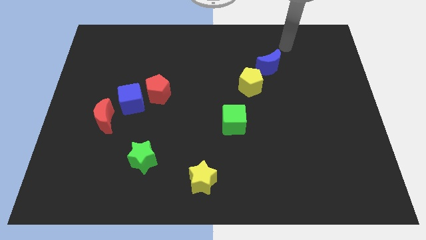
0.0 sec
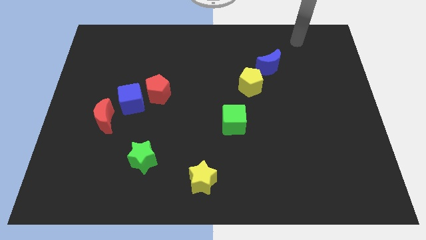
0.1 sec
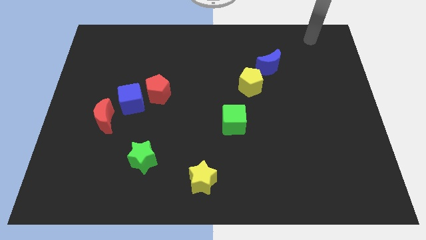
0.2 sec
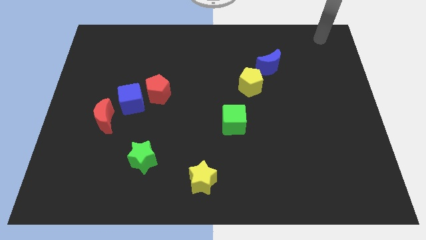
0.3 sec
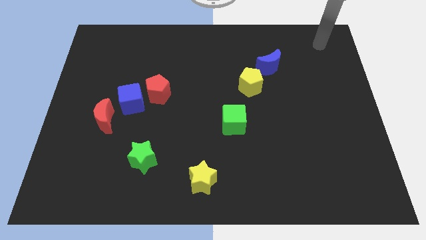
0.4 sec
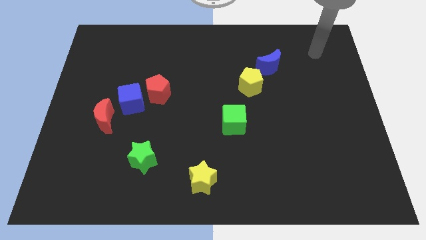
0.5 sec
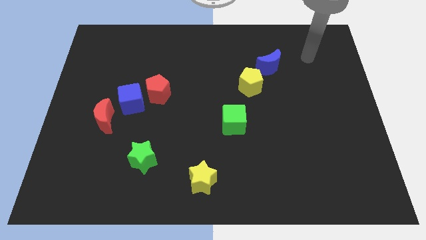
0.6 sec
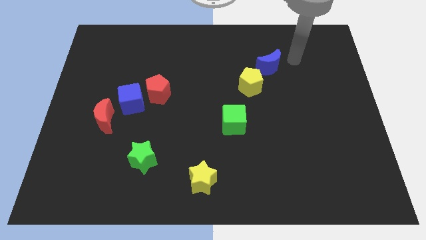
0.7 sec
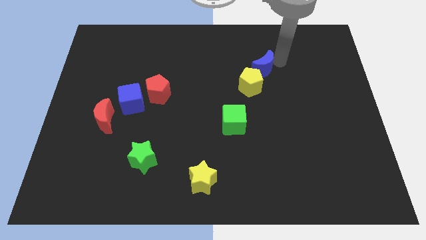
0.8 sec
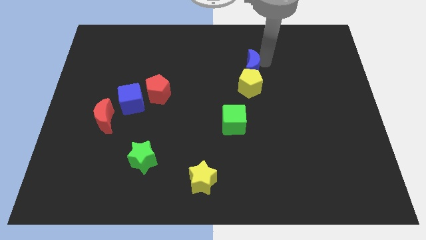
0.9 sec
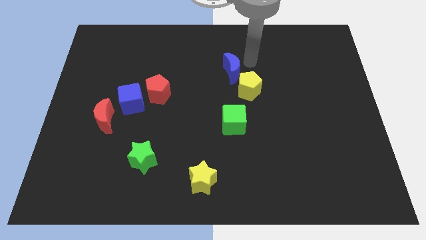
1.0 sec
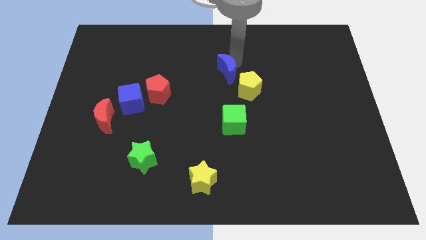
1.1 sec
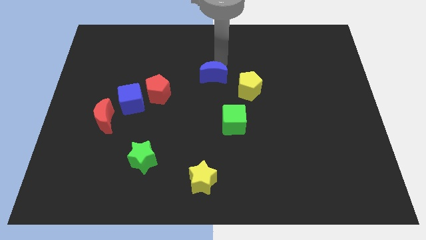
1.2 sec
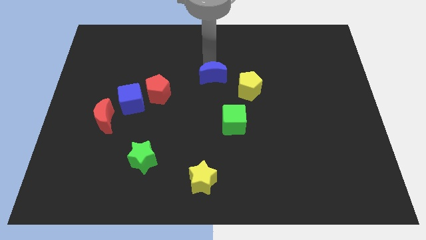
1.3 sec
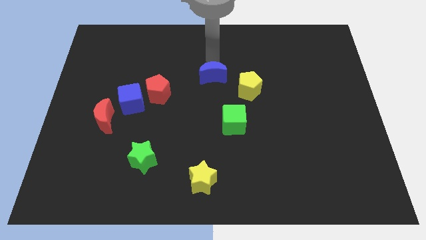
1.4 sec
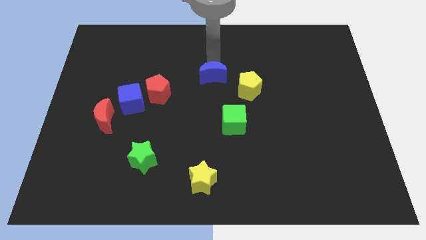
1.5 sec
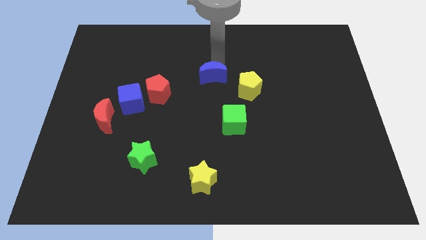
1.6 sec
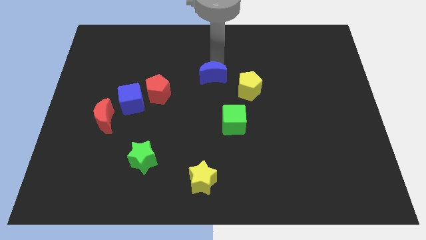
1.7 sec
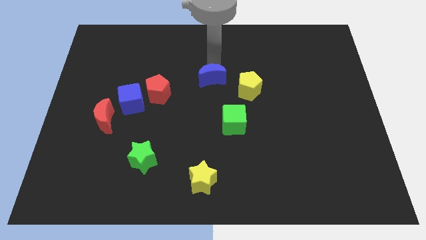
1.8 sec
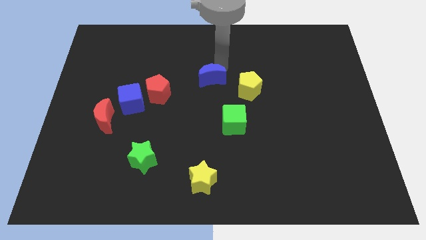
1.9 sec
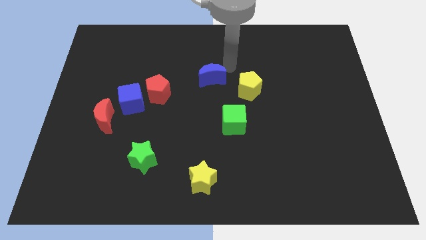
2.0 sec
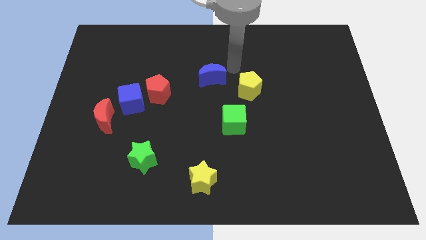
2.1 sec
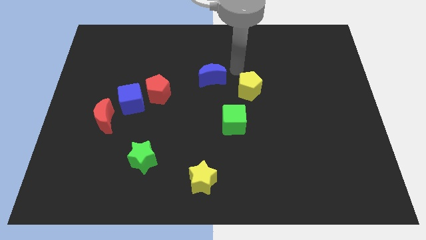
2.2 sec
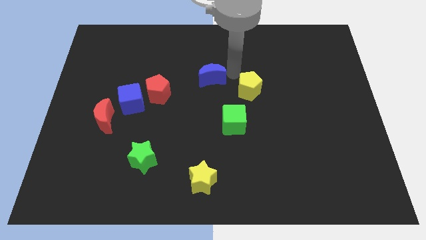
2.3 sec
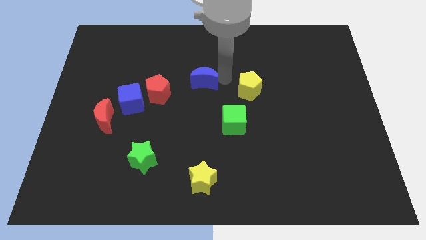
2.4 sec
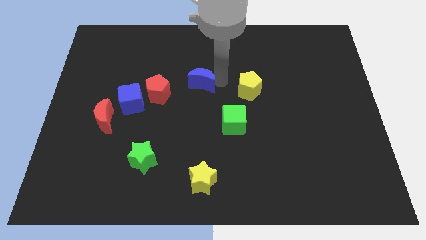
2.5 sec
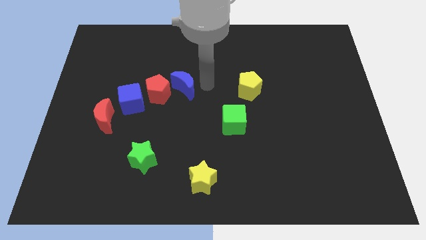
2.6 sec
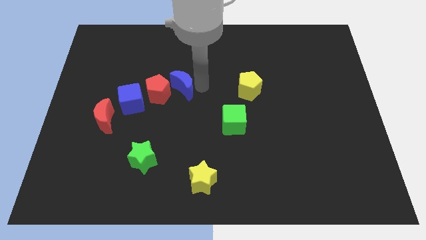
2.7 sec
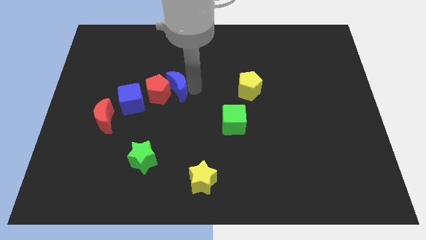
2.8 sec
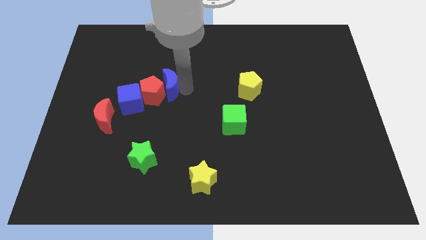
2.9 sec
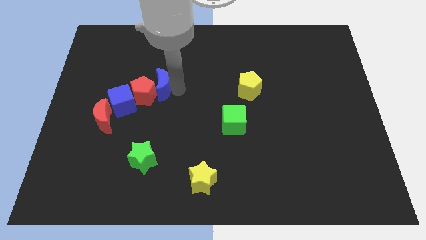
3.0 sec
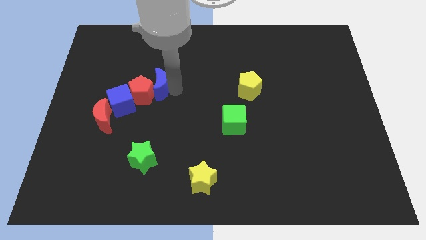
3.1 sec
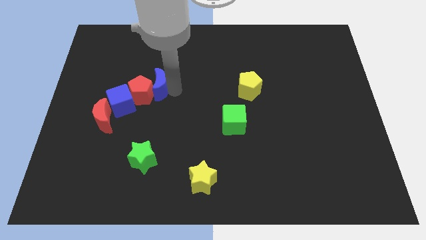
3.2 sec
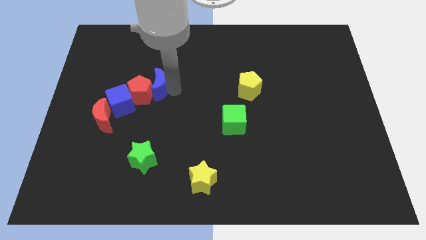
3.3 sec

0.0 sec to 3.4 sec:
push the blue moon into the red pentagon

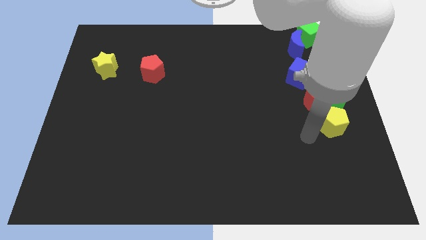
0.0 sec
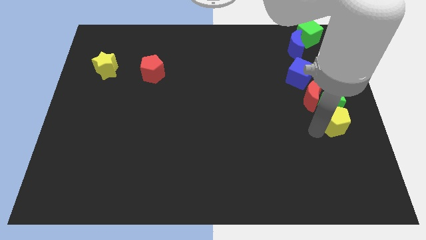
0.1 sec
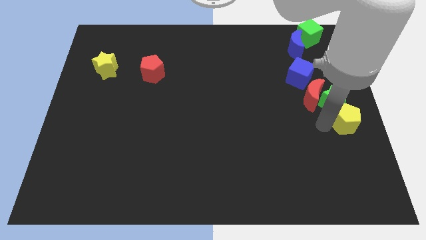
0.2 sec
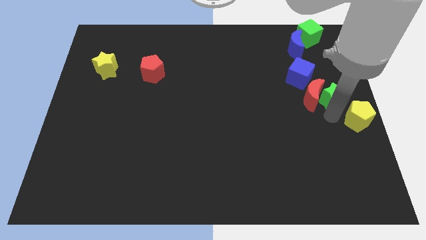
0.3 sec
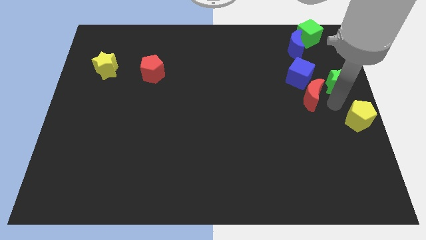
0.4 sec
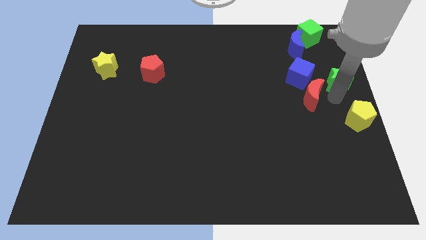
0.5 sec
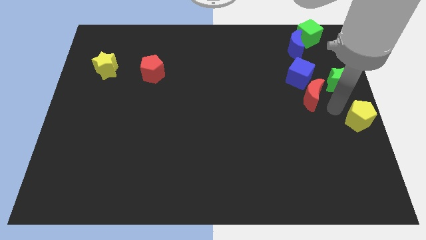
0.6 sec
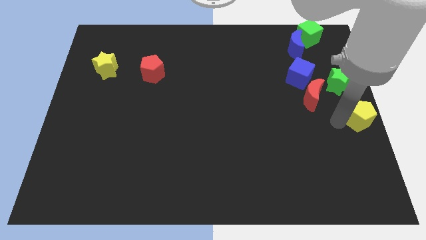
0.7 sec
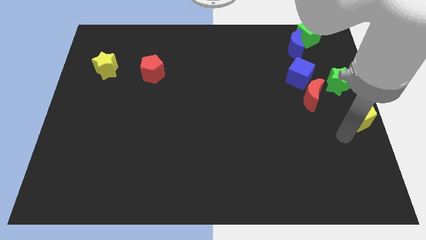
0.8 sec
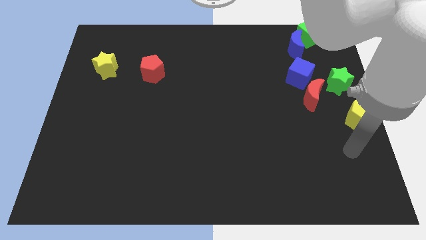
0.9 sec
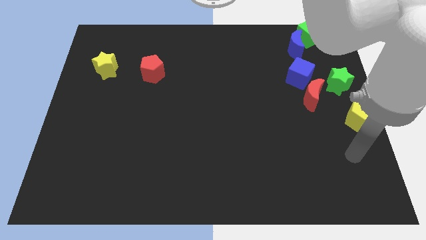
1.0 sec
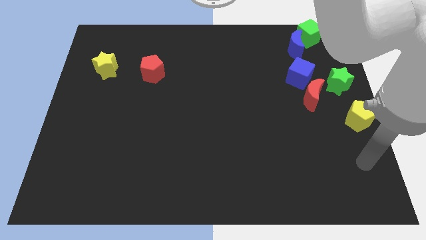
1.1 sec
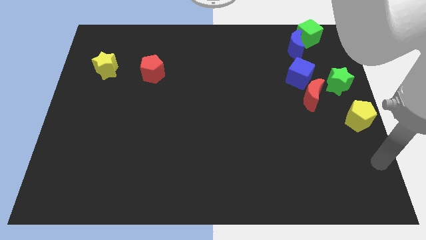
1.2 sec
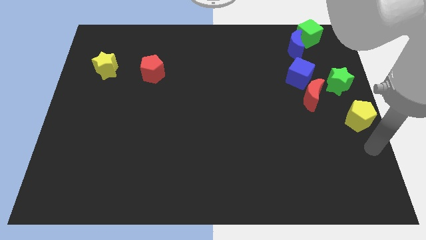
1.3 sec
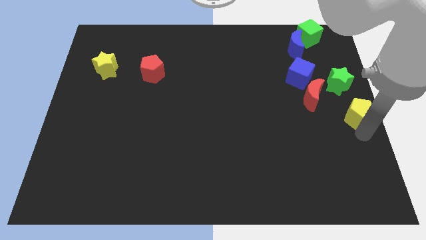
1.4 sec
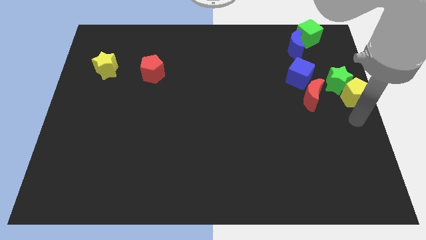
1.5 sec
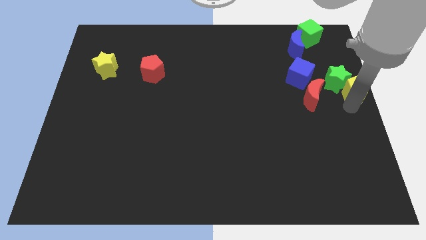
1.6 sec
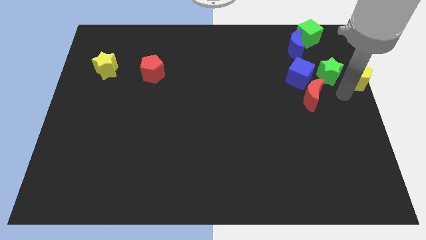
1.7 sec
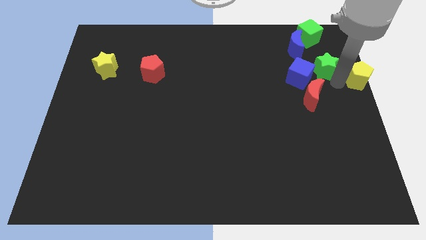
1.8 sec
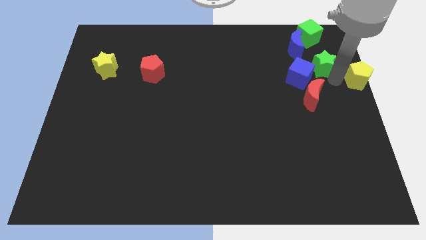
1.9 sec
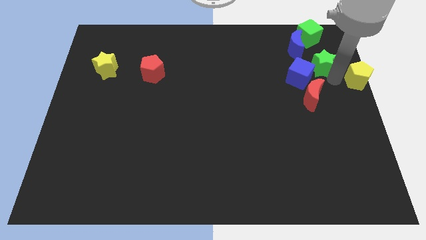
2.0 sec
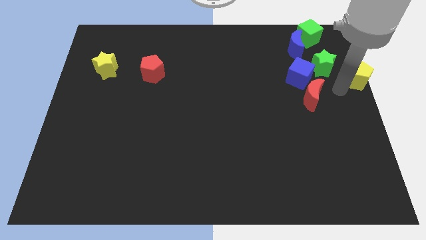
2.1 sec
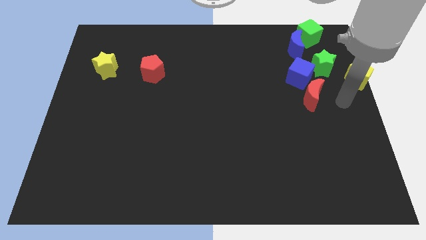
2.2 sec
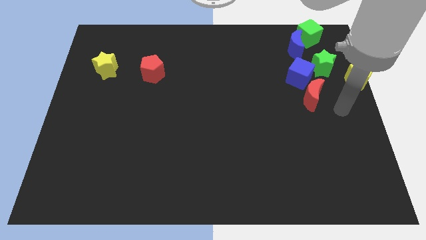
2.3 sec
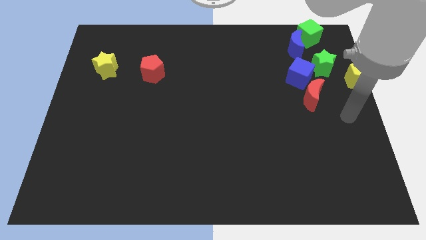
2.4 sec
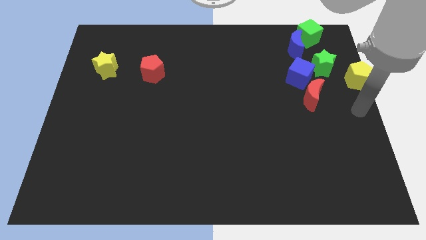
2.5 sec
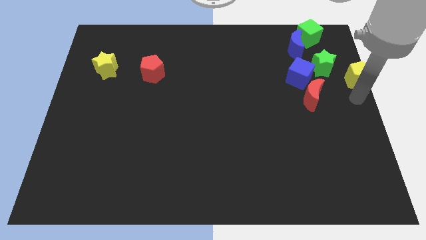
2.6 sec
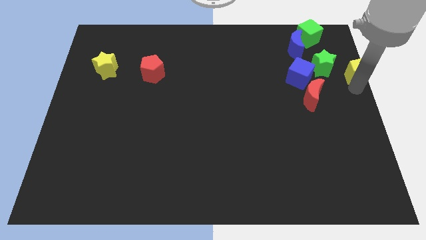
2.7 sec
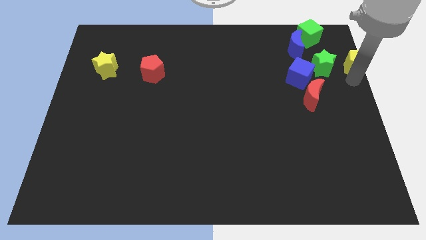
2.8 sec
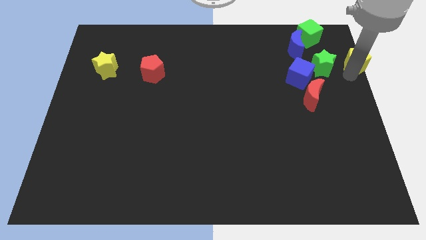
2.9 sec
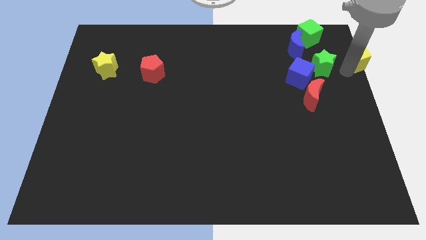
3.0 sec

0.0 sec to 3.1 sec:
separate the green star and yellow pentagon towards right of blue cube

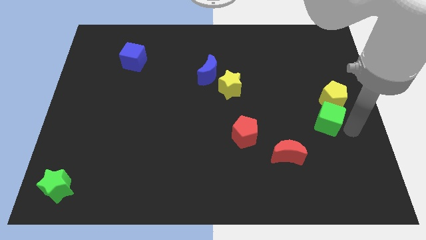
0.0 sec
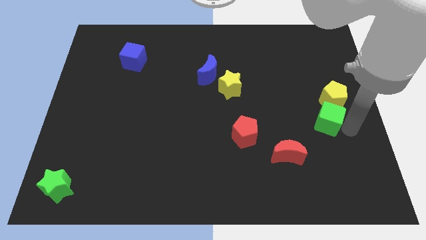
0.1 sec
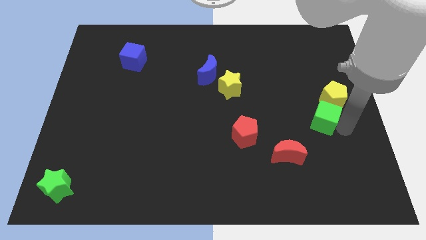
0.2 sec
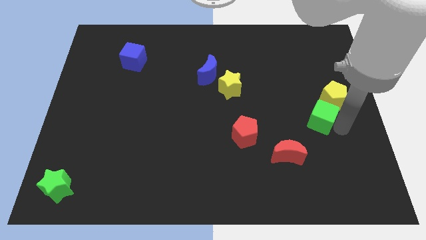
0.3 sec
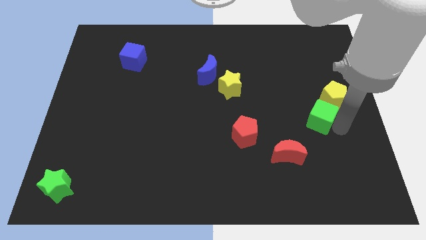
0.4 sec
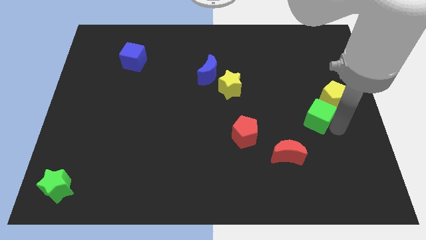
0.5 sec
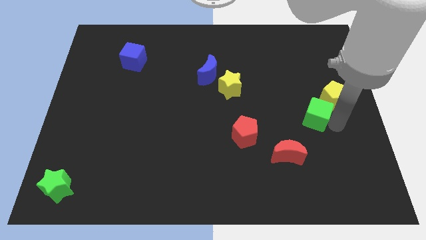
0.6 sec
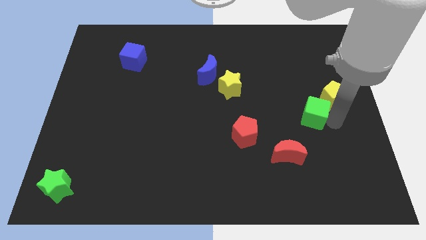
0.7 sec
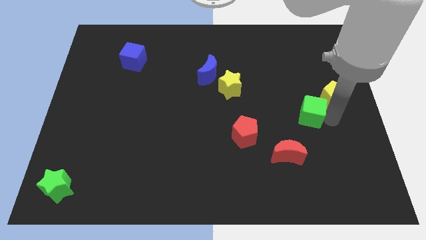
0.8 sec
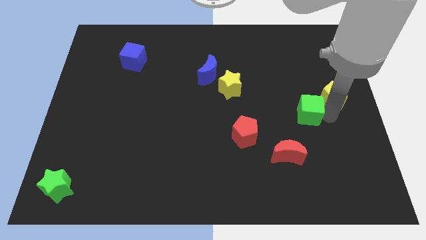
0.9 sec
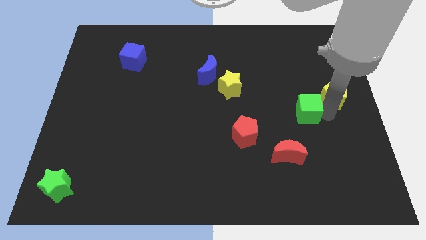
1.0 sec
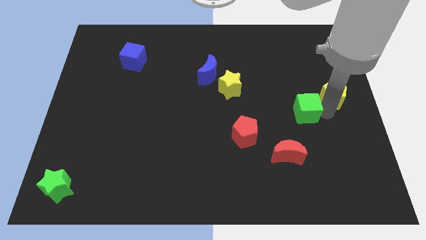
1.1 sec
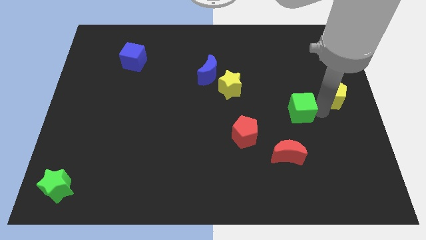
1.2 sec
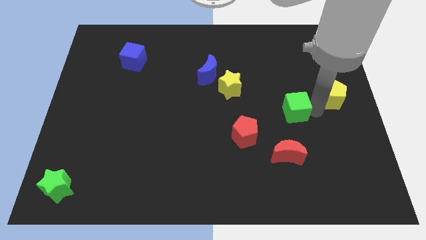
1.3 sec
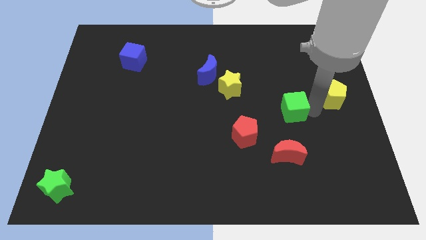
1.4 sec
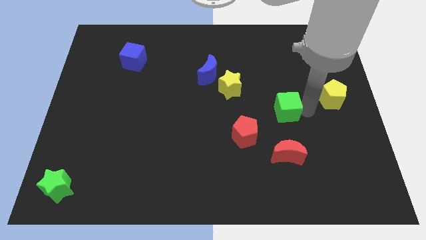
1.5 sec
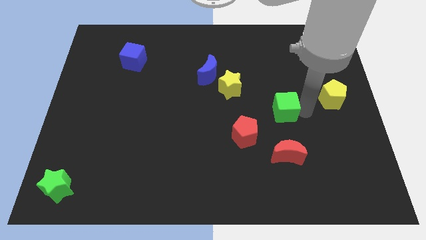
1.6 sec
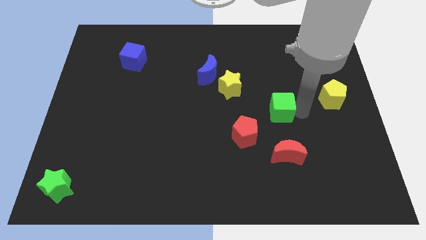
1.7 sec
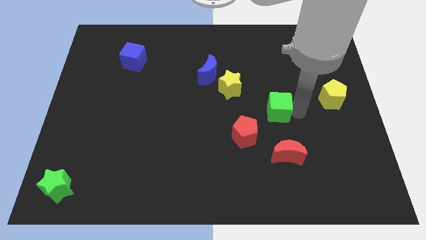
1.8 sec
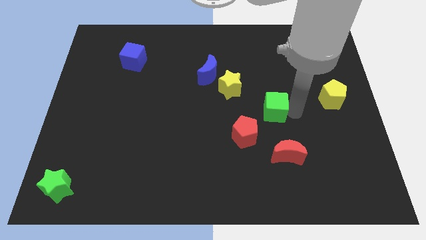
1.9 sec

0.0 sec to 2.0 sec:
move the green cube away from the yellow pentagon

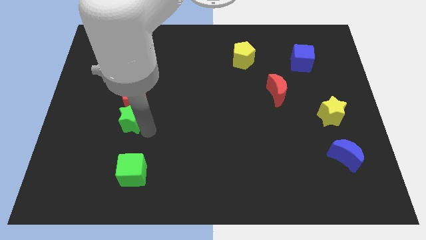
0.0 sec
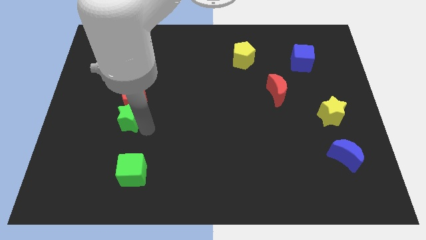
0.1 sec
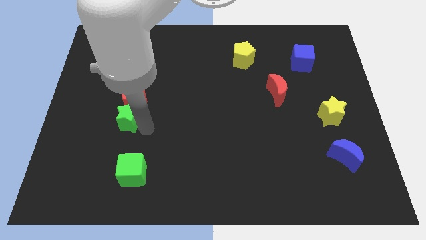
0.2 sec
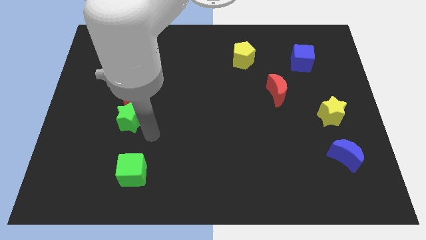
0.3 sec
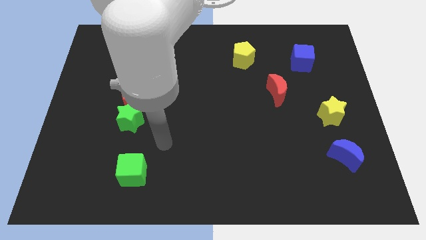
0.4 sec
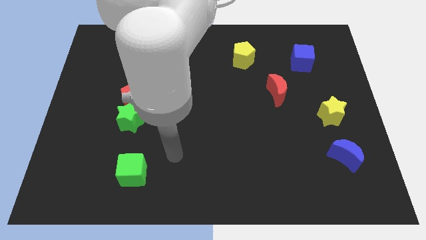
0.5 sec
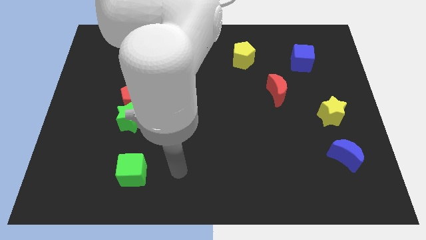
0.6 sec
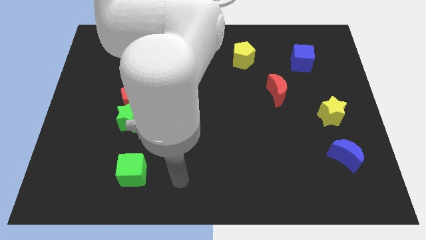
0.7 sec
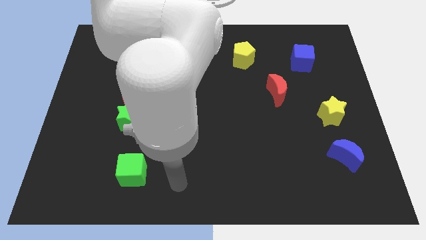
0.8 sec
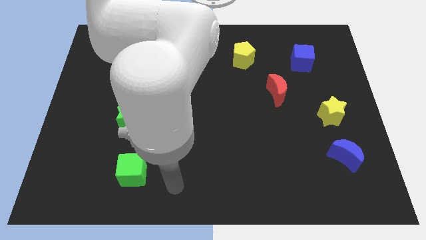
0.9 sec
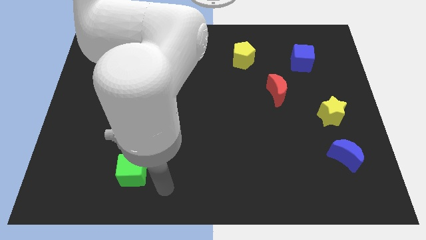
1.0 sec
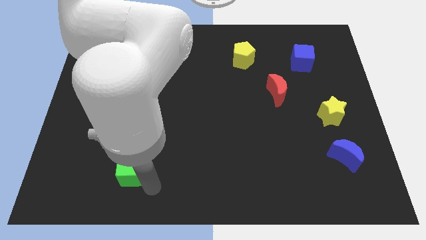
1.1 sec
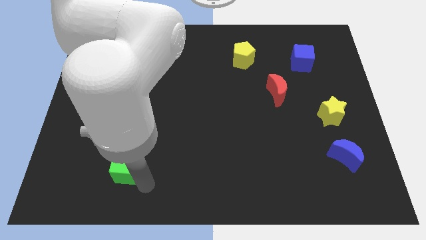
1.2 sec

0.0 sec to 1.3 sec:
move your arm to the right bottom of the green cube
